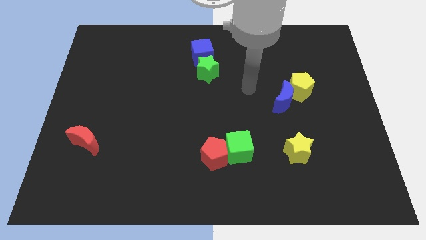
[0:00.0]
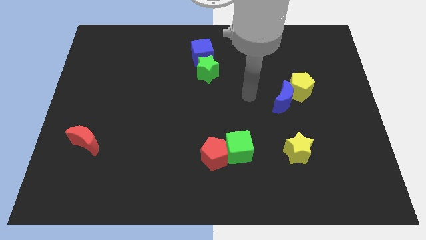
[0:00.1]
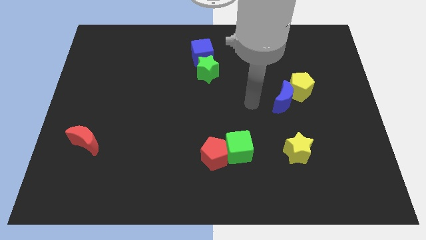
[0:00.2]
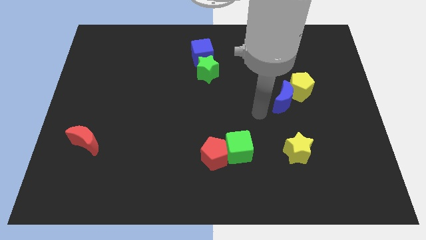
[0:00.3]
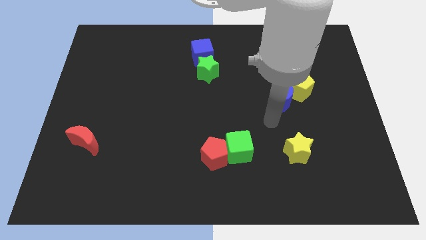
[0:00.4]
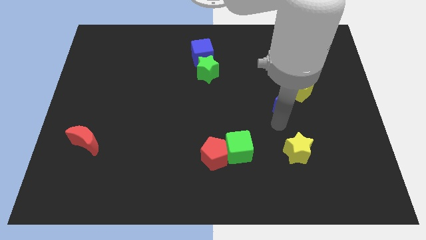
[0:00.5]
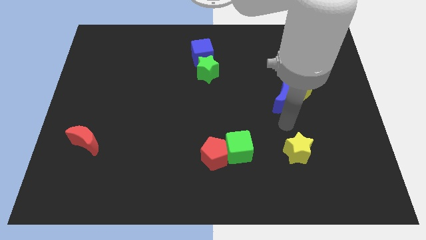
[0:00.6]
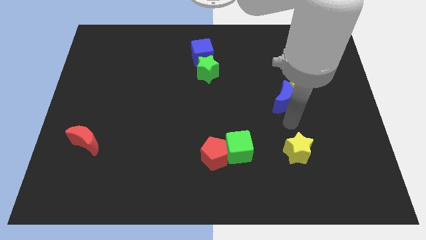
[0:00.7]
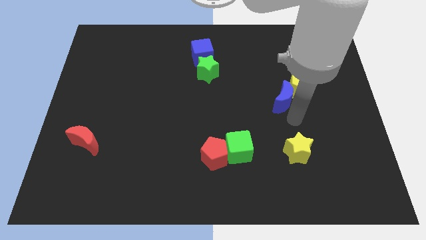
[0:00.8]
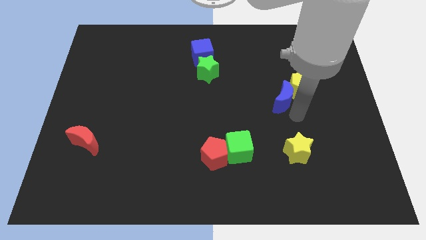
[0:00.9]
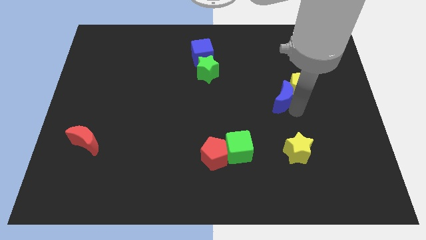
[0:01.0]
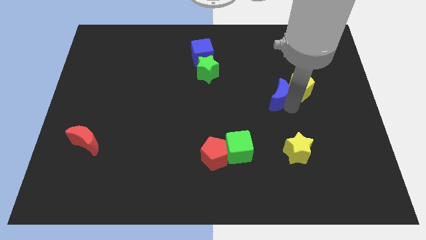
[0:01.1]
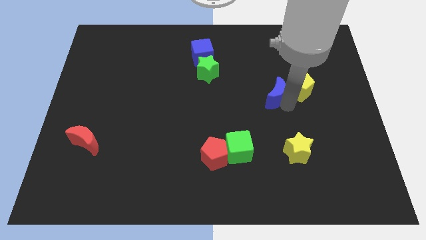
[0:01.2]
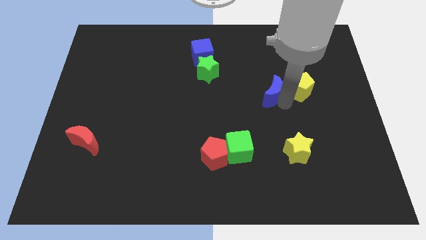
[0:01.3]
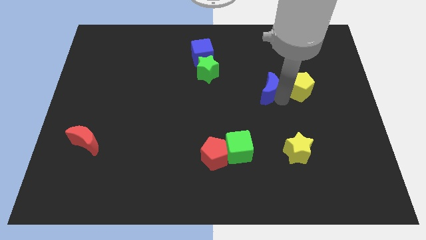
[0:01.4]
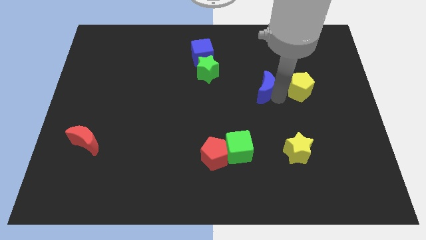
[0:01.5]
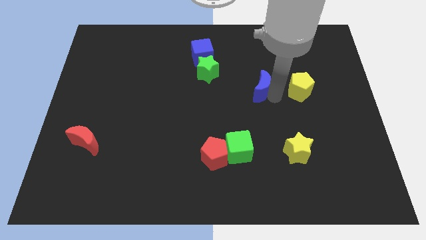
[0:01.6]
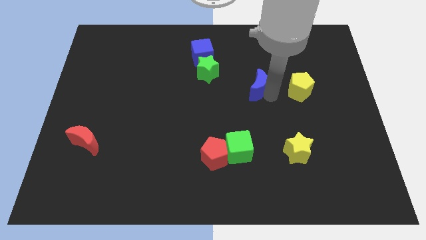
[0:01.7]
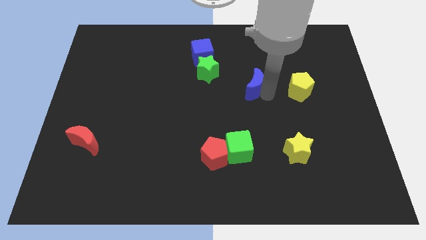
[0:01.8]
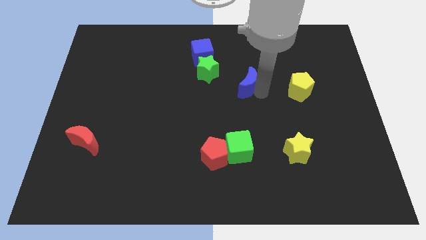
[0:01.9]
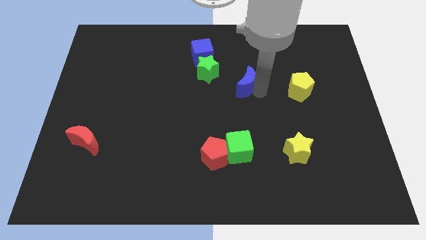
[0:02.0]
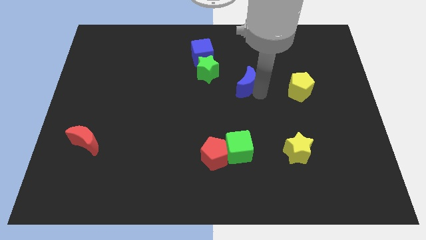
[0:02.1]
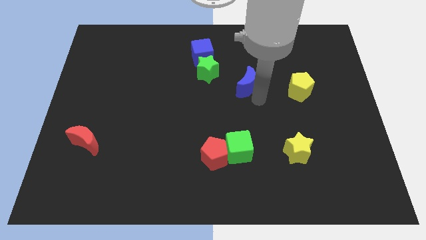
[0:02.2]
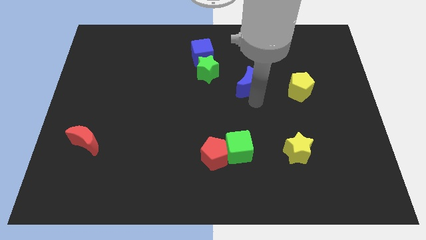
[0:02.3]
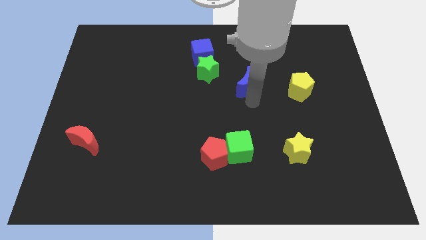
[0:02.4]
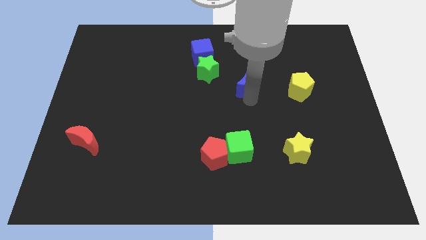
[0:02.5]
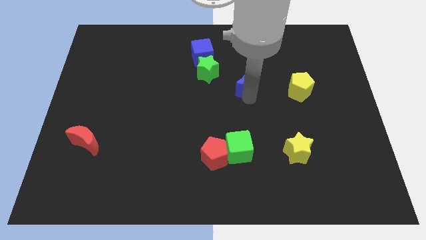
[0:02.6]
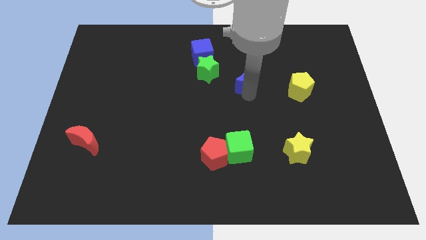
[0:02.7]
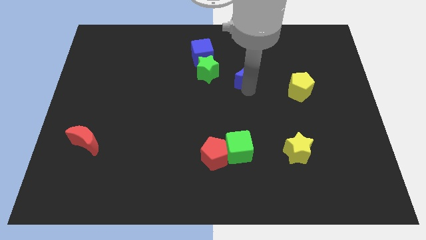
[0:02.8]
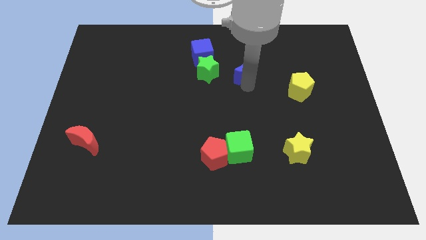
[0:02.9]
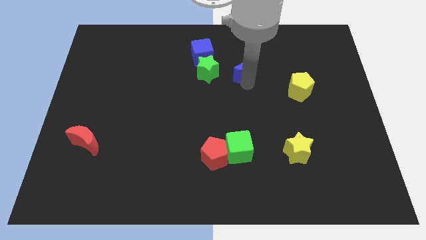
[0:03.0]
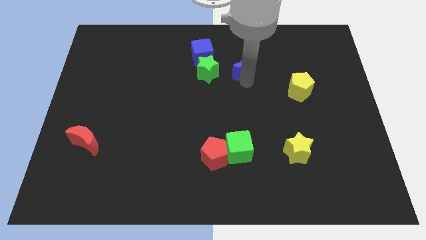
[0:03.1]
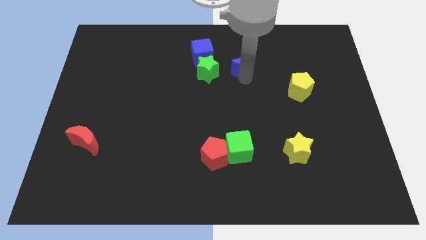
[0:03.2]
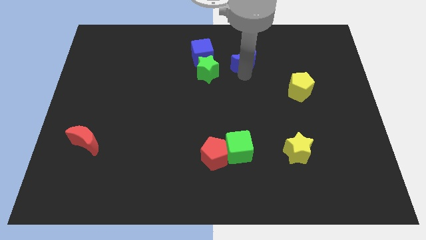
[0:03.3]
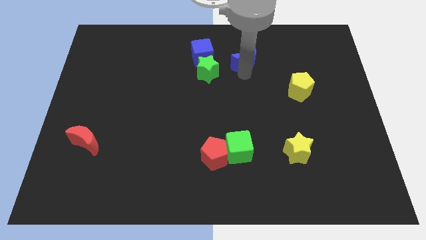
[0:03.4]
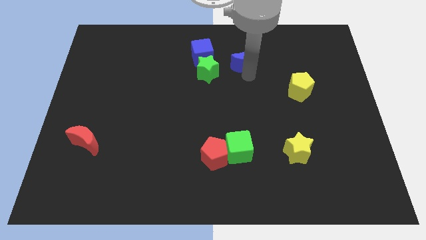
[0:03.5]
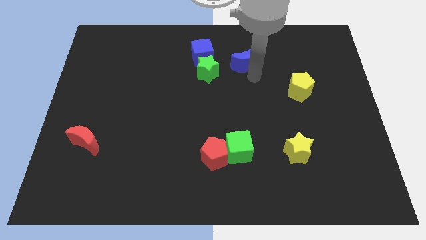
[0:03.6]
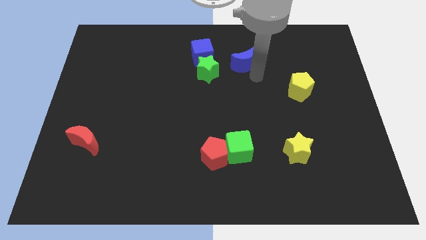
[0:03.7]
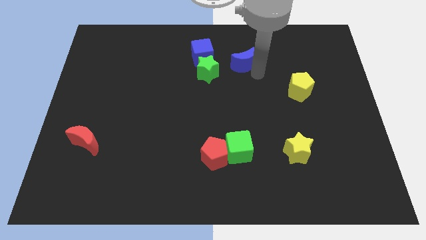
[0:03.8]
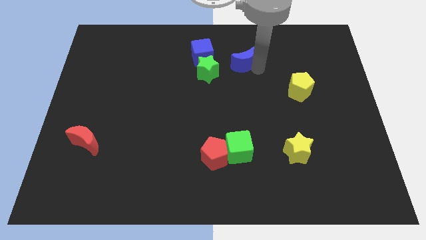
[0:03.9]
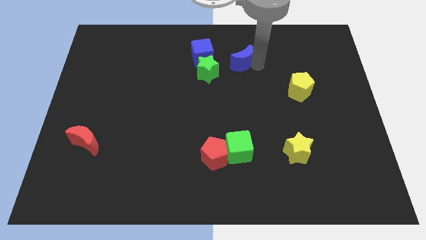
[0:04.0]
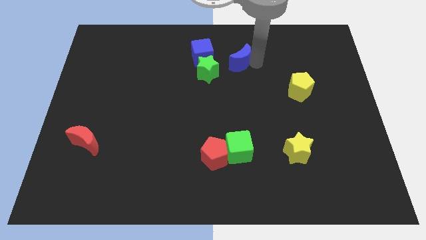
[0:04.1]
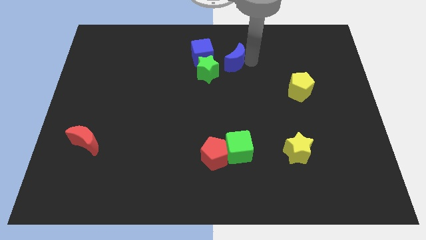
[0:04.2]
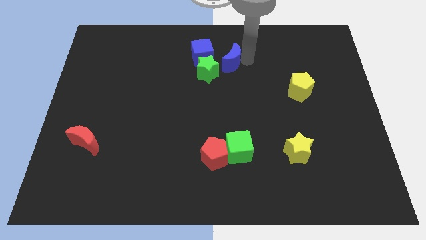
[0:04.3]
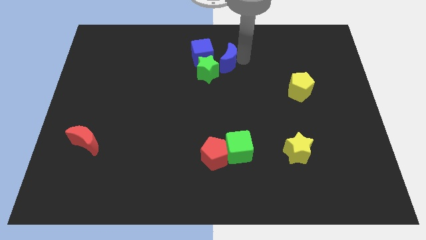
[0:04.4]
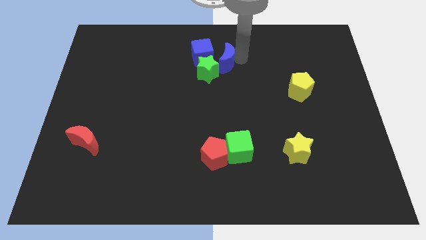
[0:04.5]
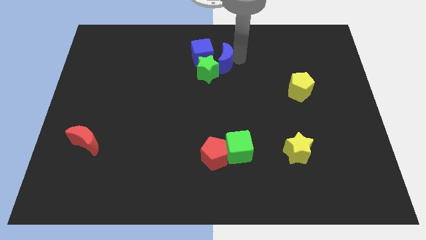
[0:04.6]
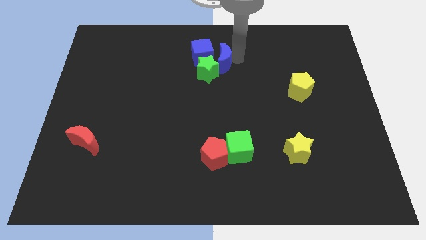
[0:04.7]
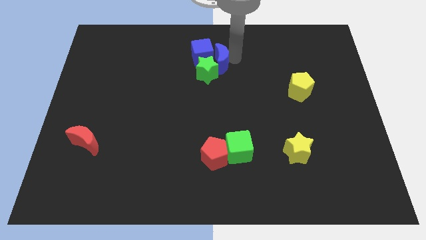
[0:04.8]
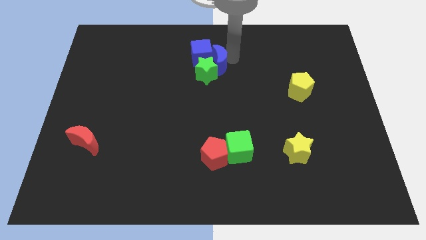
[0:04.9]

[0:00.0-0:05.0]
slide the blue moon to the blue cube

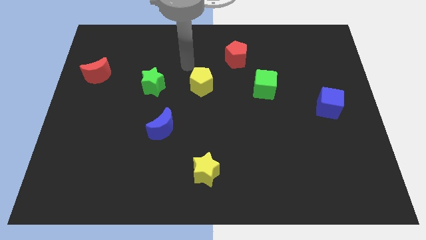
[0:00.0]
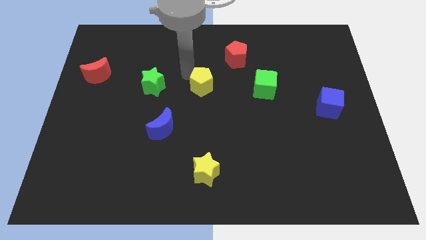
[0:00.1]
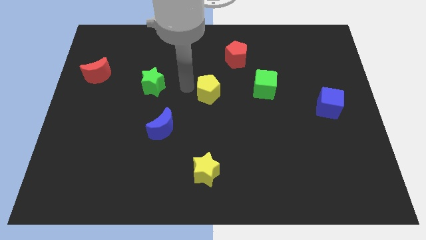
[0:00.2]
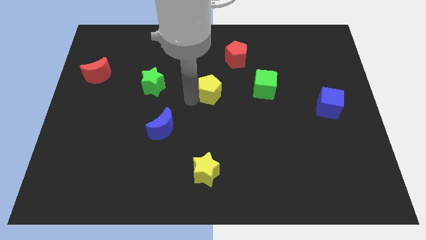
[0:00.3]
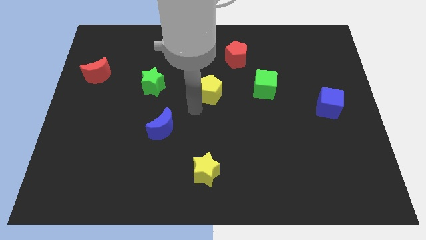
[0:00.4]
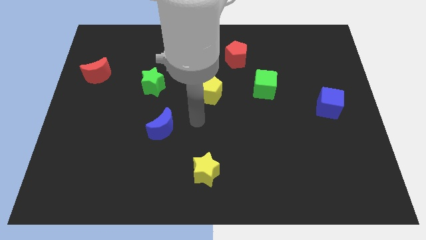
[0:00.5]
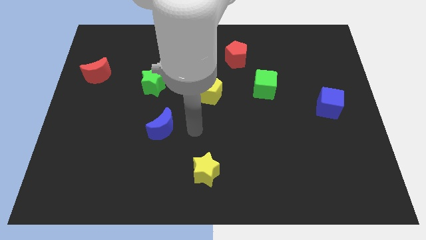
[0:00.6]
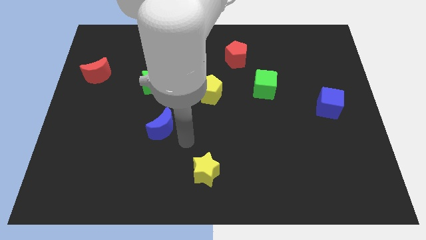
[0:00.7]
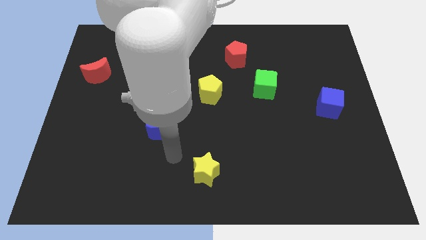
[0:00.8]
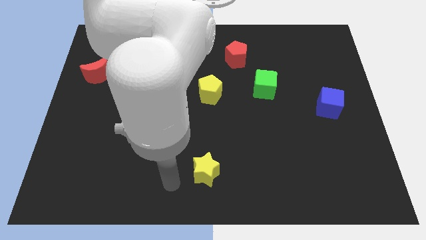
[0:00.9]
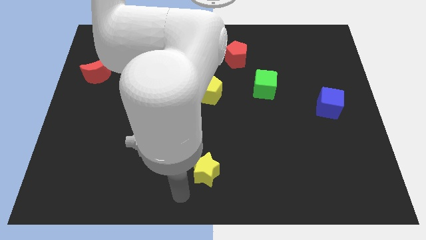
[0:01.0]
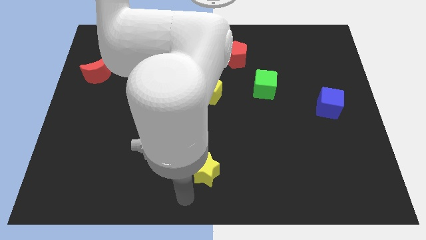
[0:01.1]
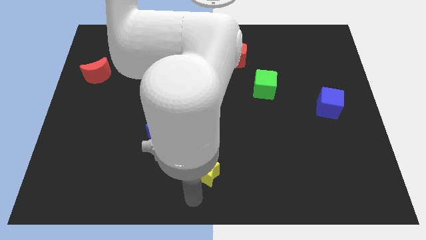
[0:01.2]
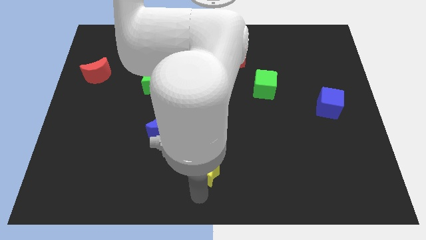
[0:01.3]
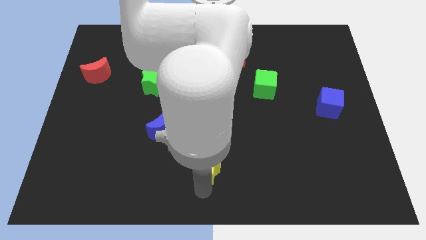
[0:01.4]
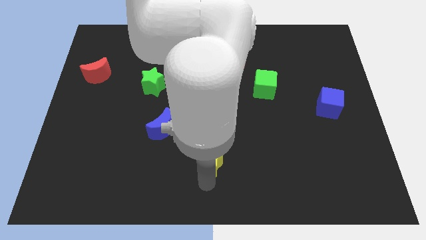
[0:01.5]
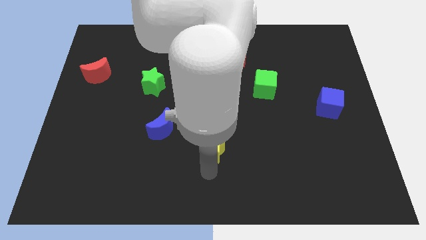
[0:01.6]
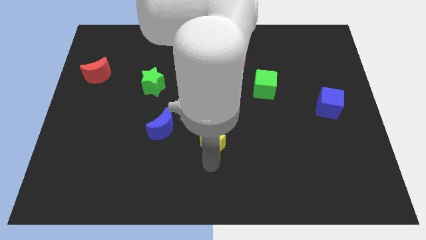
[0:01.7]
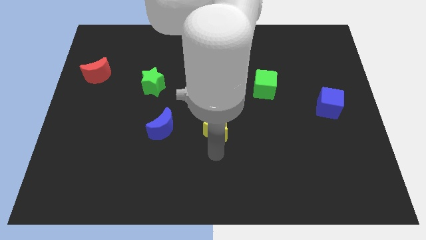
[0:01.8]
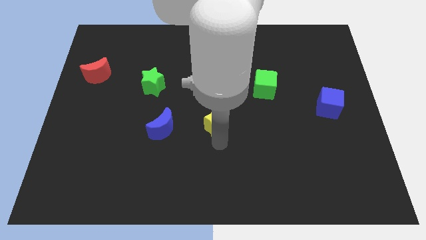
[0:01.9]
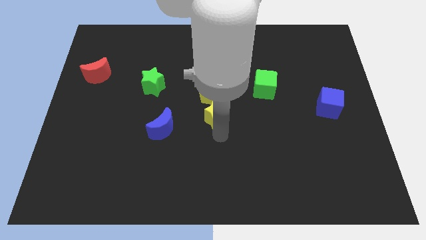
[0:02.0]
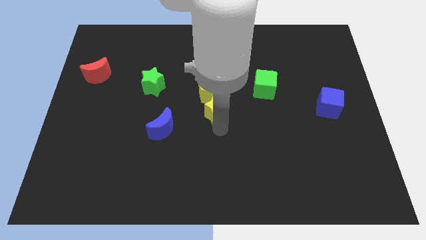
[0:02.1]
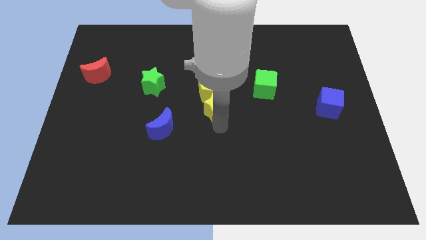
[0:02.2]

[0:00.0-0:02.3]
push the yellow star to the yellow pentagon

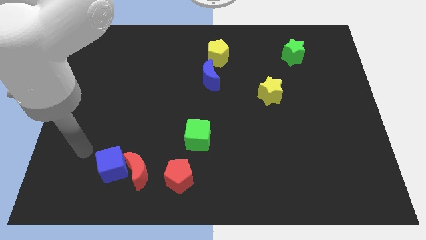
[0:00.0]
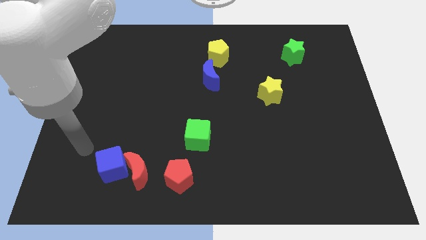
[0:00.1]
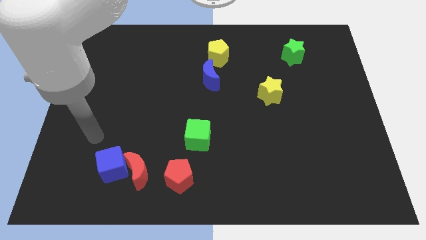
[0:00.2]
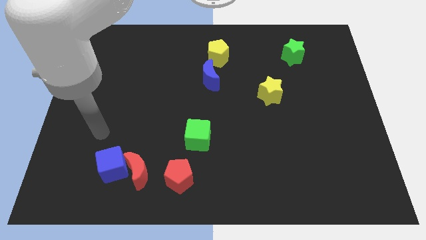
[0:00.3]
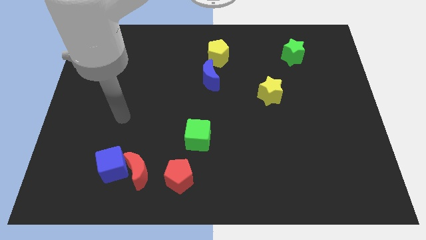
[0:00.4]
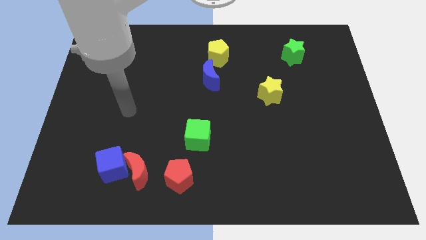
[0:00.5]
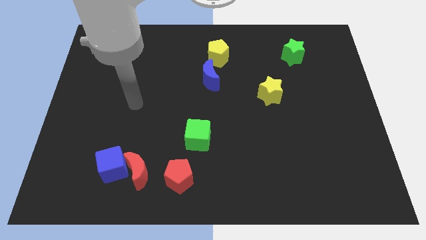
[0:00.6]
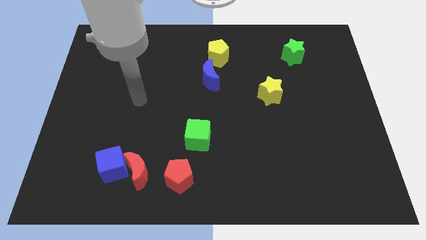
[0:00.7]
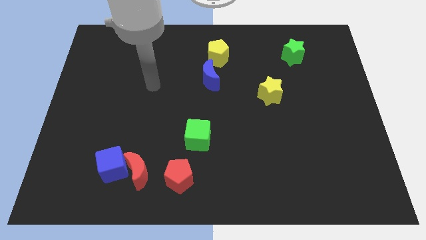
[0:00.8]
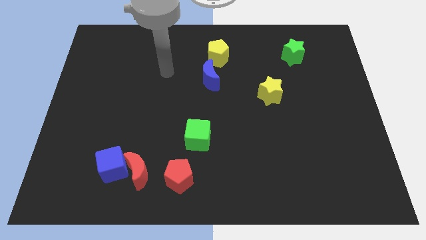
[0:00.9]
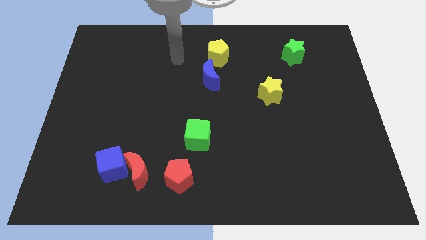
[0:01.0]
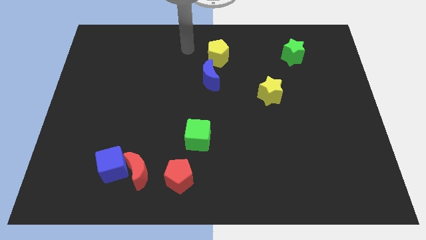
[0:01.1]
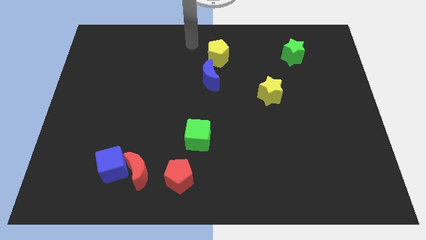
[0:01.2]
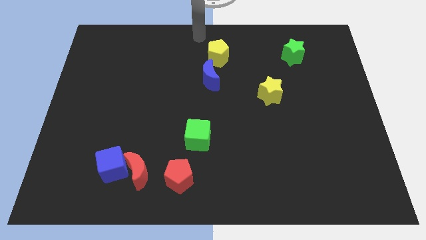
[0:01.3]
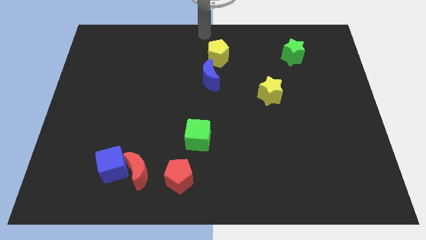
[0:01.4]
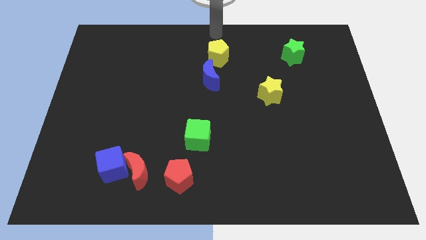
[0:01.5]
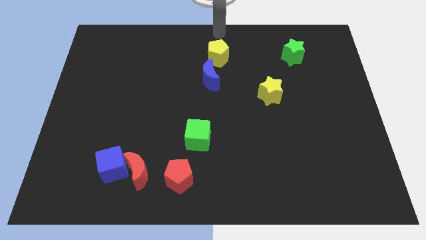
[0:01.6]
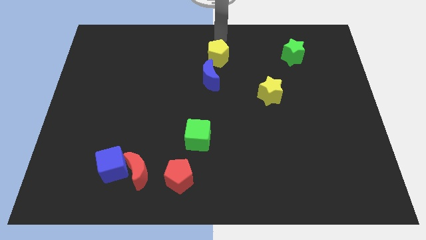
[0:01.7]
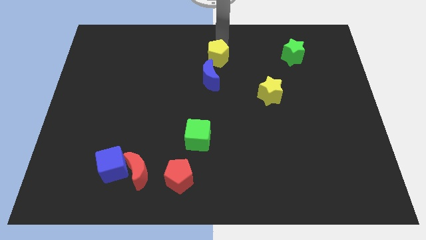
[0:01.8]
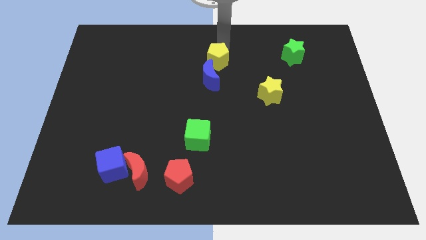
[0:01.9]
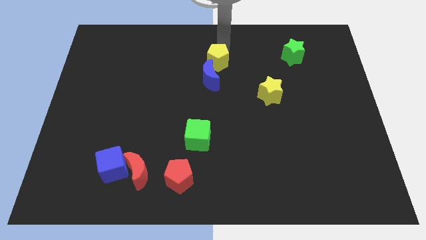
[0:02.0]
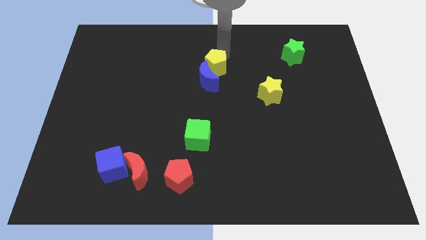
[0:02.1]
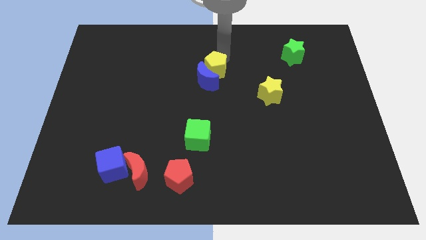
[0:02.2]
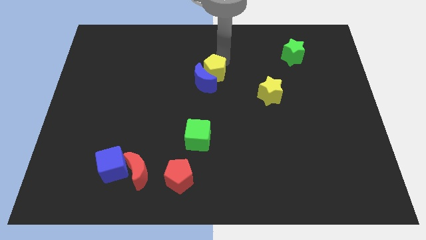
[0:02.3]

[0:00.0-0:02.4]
push the yellow pentagon next to the blue moon
